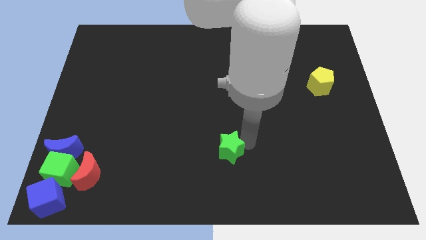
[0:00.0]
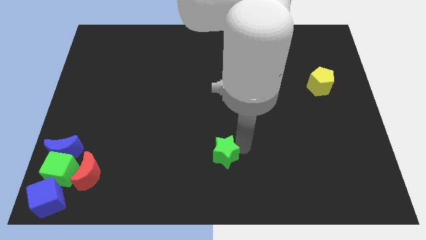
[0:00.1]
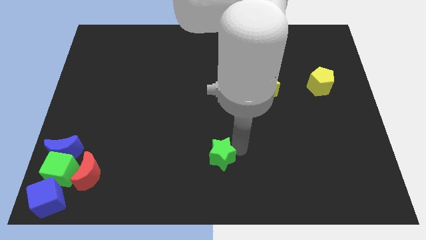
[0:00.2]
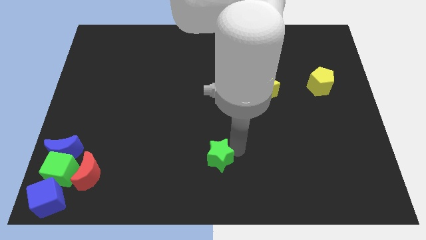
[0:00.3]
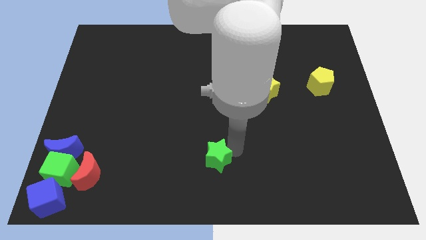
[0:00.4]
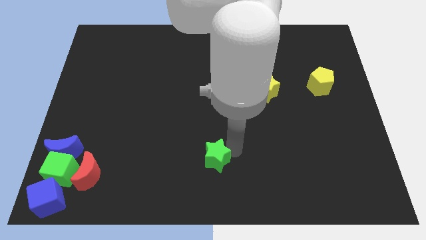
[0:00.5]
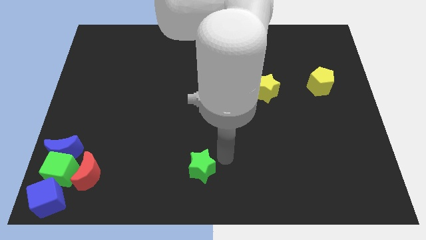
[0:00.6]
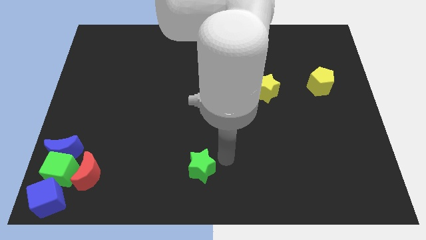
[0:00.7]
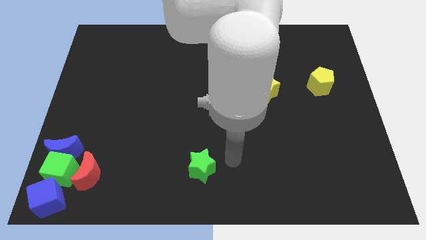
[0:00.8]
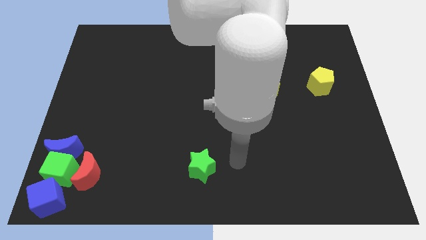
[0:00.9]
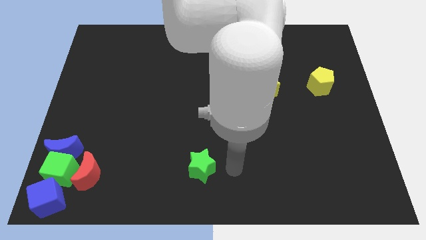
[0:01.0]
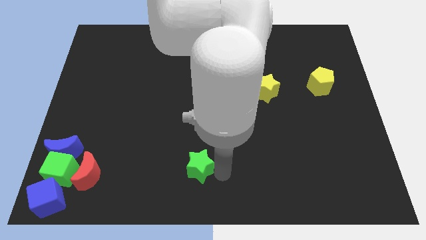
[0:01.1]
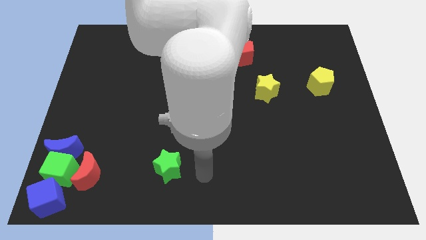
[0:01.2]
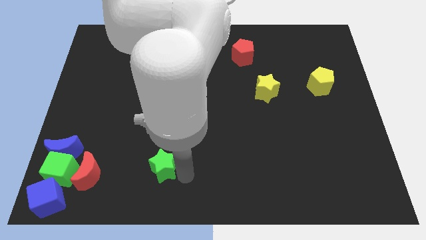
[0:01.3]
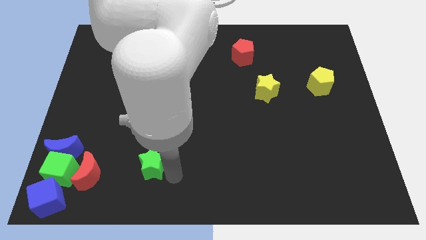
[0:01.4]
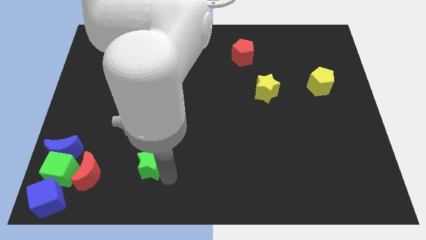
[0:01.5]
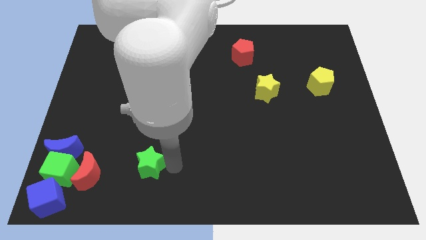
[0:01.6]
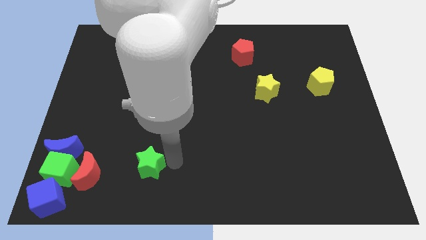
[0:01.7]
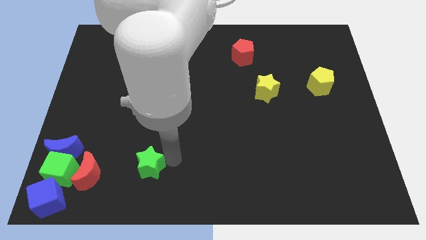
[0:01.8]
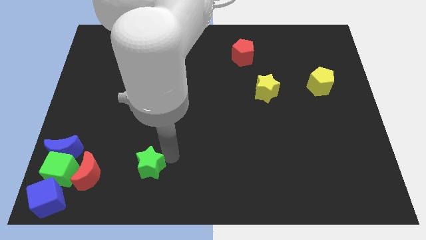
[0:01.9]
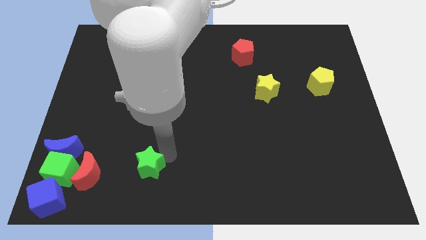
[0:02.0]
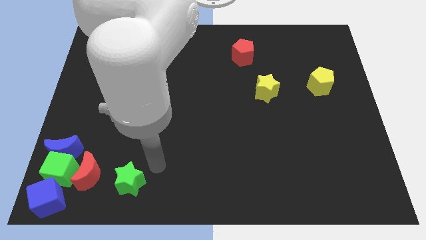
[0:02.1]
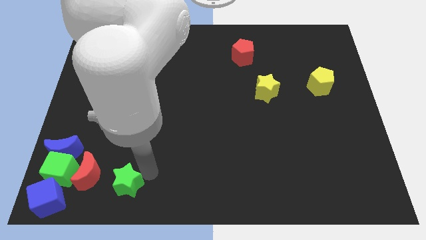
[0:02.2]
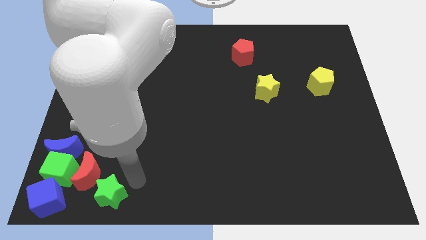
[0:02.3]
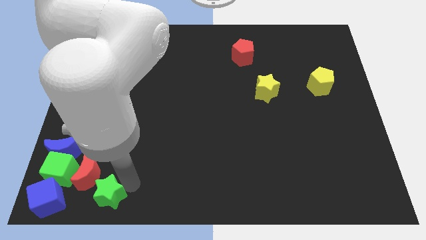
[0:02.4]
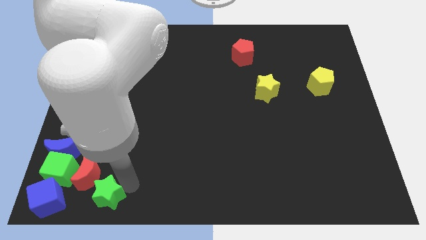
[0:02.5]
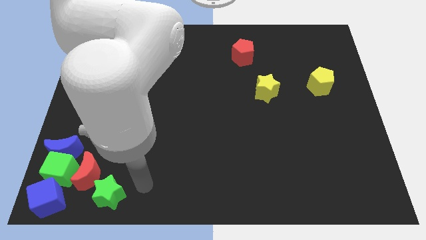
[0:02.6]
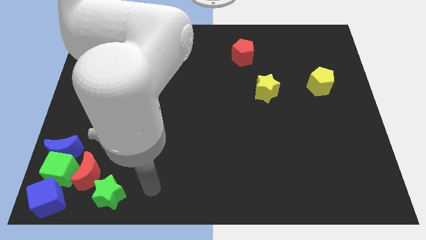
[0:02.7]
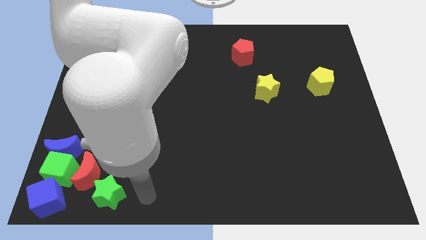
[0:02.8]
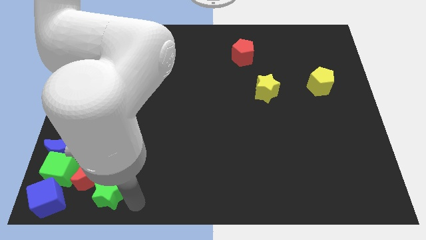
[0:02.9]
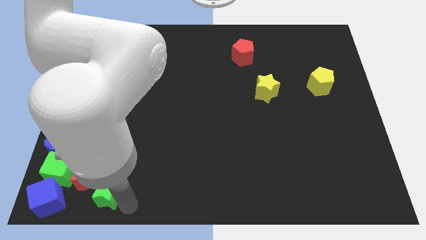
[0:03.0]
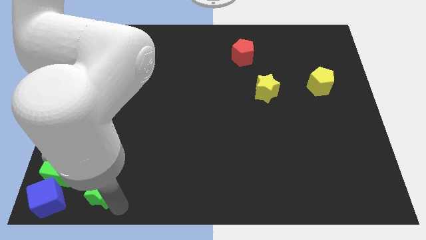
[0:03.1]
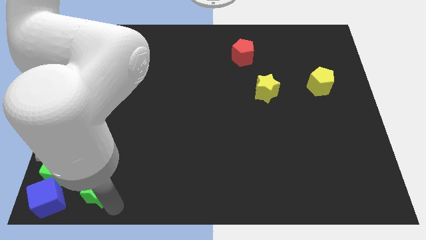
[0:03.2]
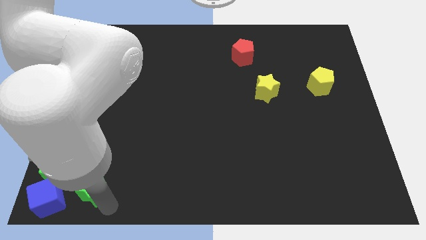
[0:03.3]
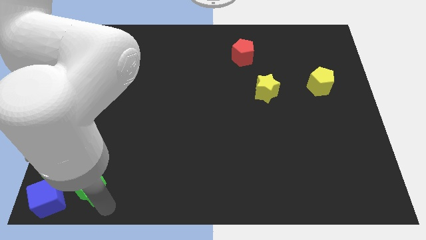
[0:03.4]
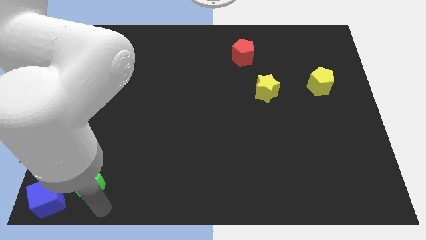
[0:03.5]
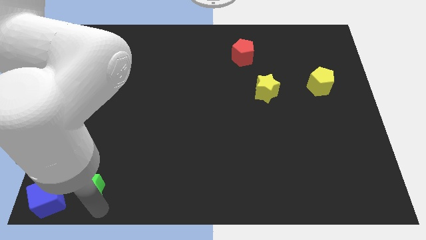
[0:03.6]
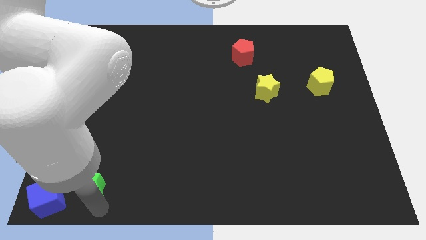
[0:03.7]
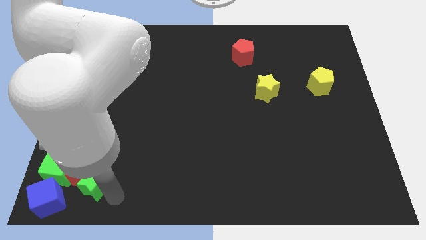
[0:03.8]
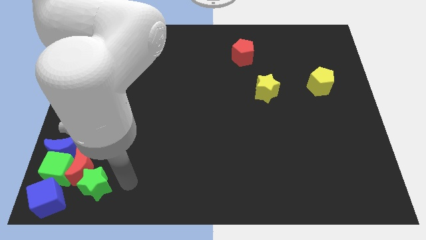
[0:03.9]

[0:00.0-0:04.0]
place green star adjacent to the red moon

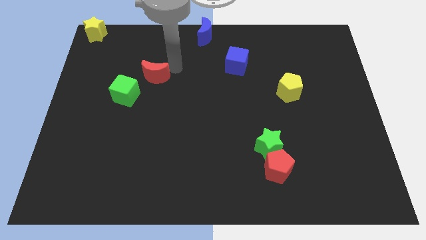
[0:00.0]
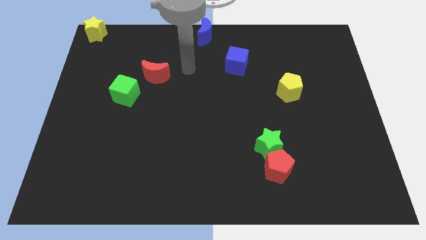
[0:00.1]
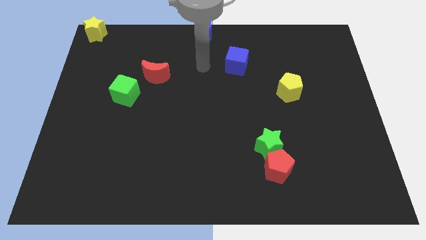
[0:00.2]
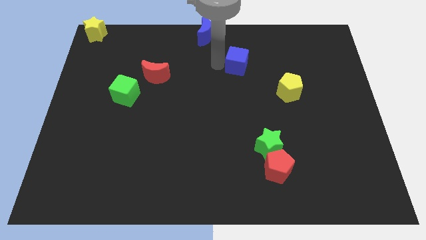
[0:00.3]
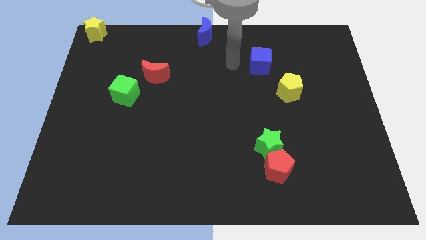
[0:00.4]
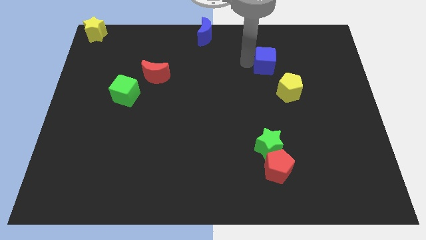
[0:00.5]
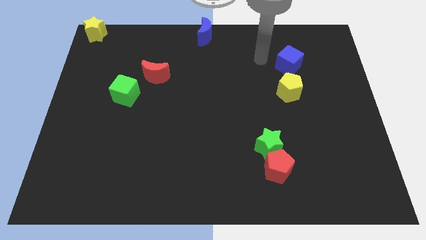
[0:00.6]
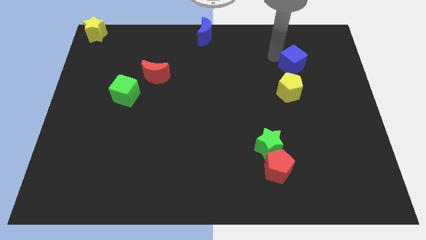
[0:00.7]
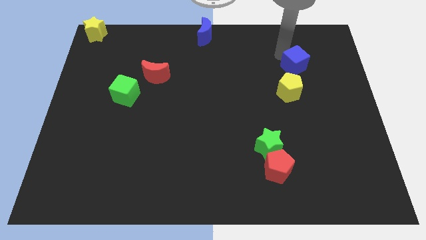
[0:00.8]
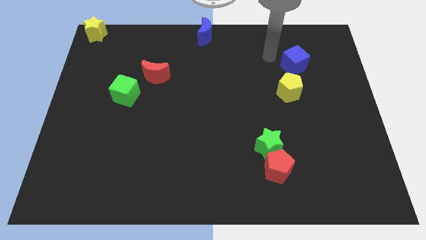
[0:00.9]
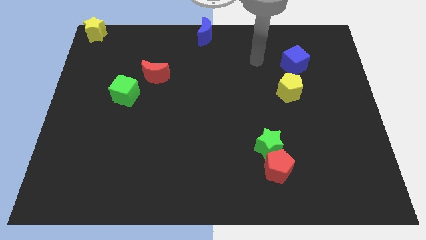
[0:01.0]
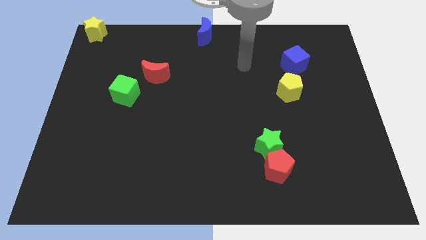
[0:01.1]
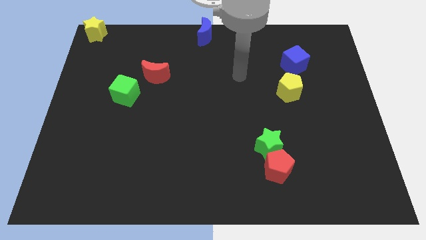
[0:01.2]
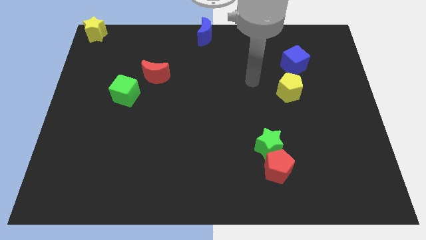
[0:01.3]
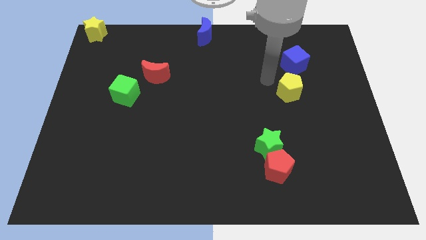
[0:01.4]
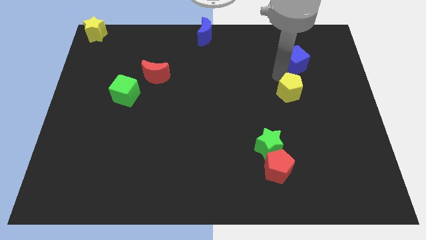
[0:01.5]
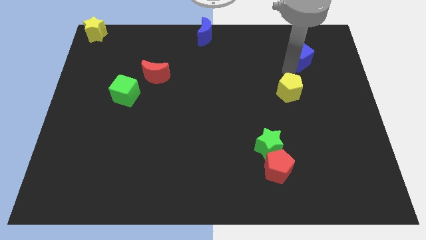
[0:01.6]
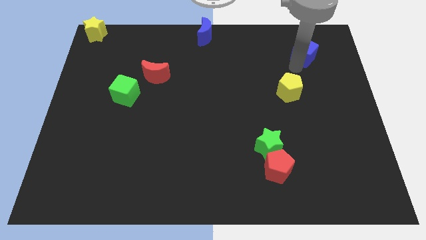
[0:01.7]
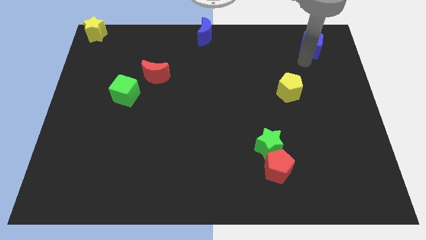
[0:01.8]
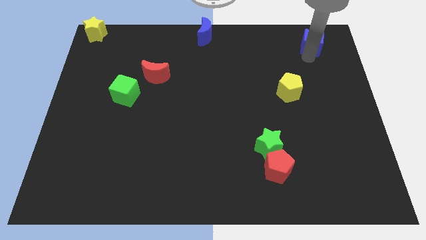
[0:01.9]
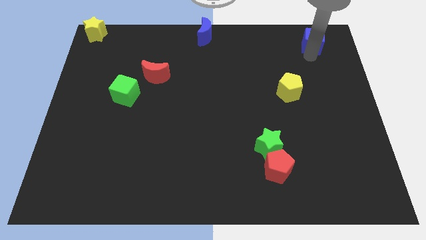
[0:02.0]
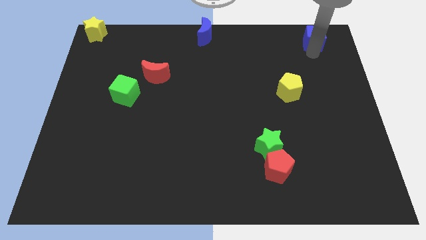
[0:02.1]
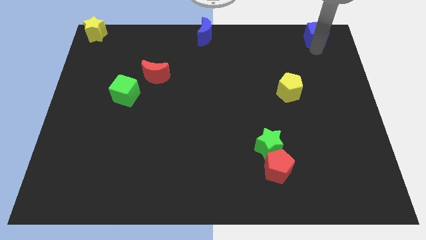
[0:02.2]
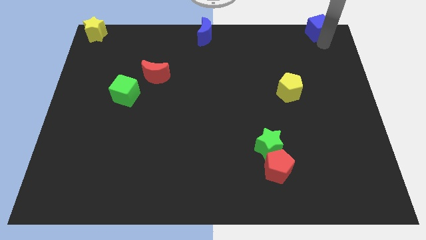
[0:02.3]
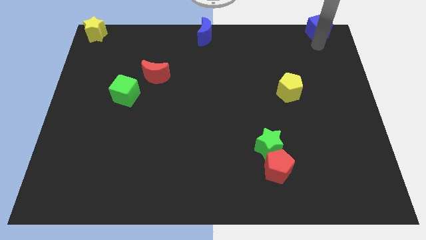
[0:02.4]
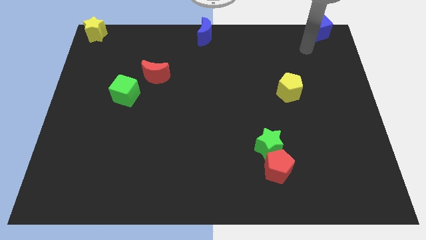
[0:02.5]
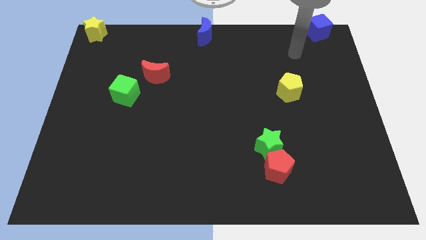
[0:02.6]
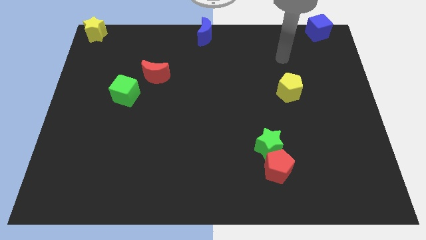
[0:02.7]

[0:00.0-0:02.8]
move the blue cube to the top right corner

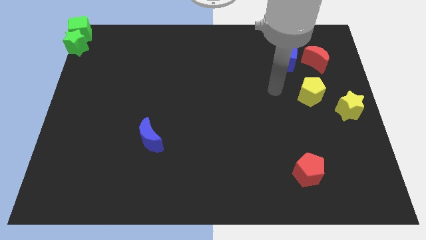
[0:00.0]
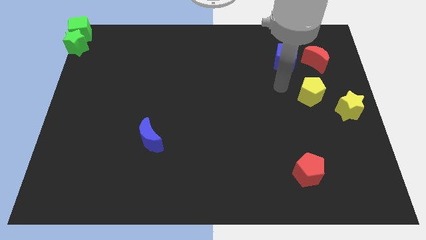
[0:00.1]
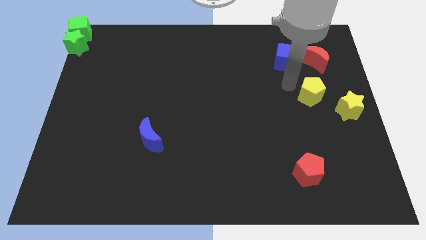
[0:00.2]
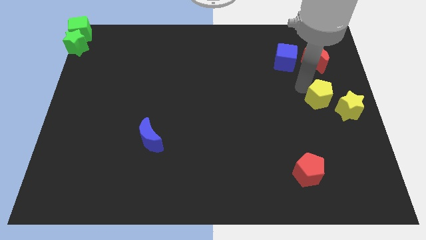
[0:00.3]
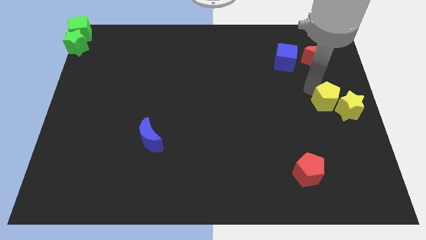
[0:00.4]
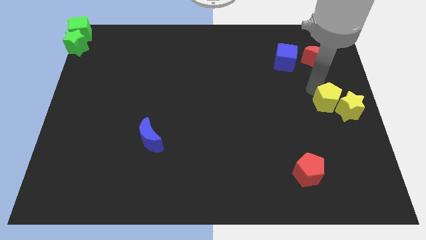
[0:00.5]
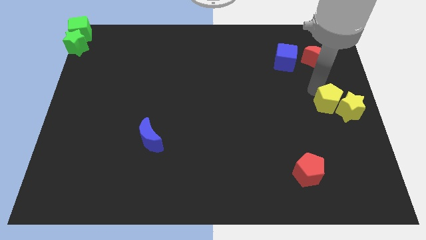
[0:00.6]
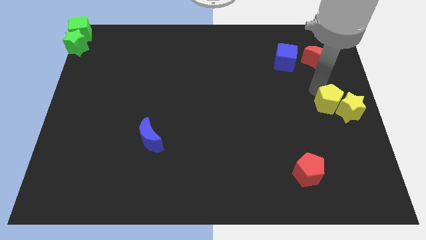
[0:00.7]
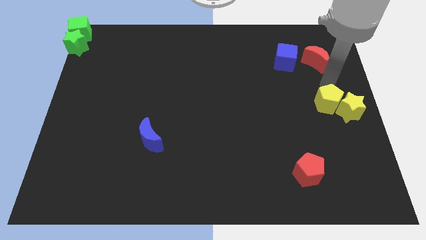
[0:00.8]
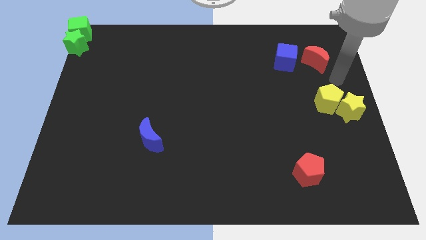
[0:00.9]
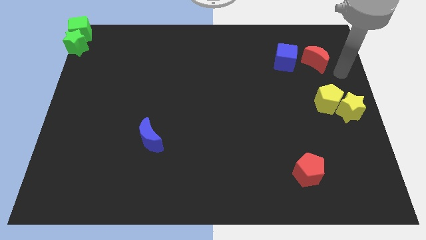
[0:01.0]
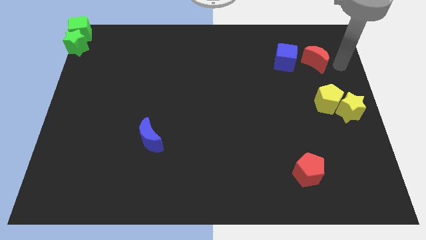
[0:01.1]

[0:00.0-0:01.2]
move the yellow pentagon into the yellow star

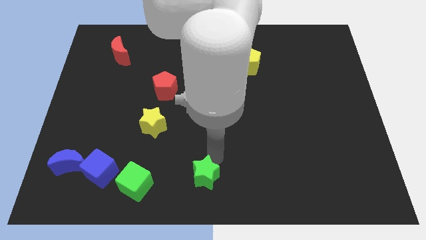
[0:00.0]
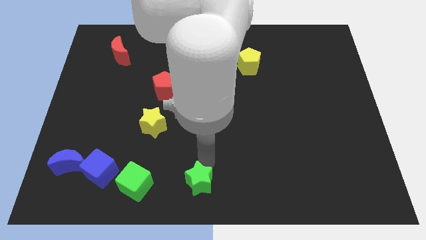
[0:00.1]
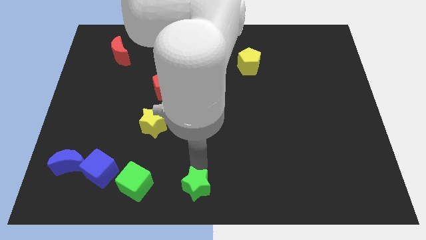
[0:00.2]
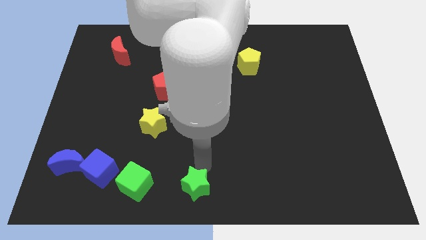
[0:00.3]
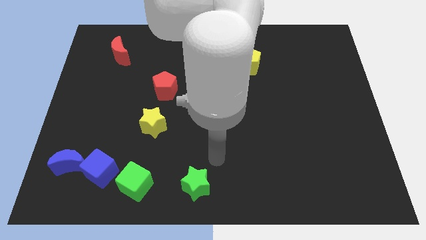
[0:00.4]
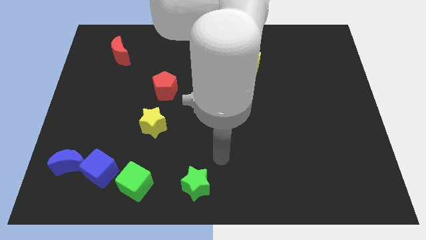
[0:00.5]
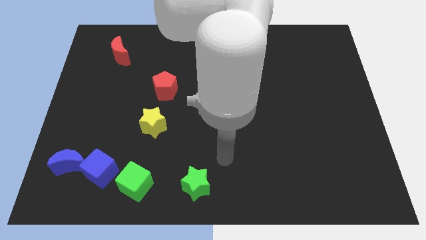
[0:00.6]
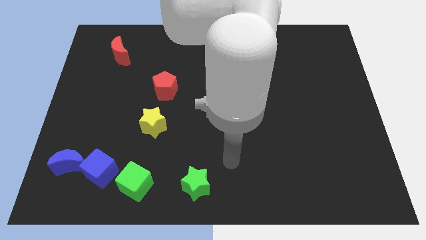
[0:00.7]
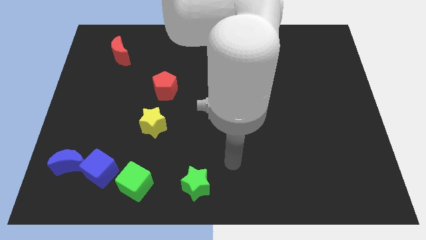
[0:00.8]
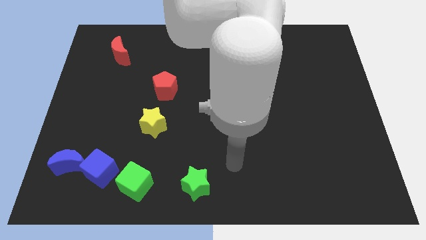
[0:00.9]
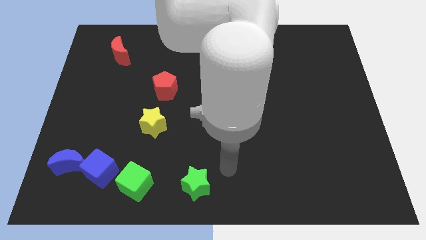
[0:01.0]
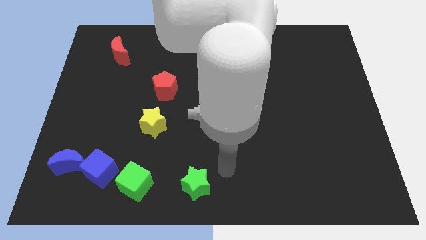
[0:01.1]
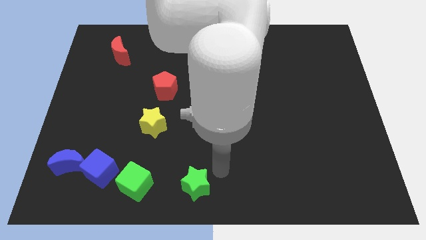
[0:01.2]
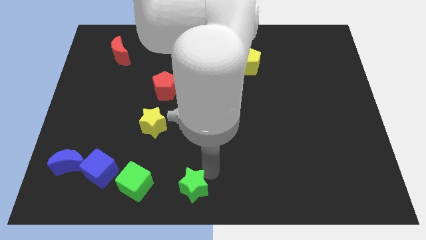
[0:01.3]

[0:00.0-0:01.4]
drag the green star slightly downwards
